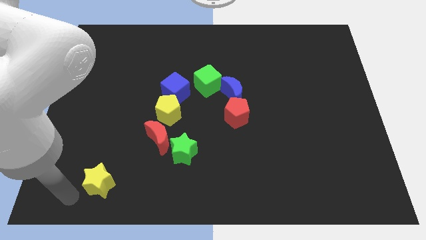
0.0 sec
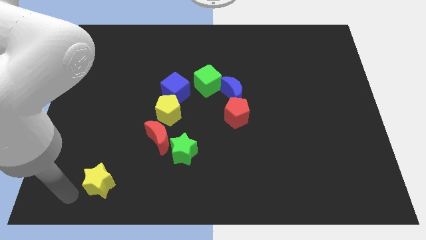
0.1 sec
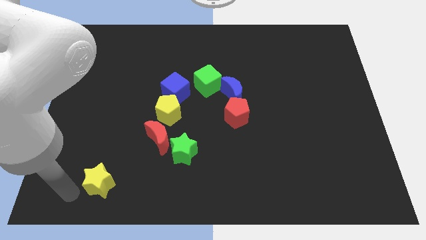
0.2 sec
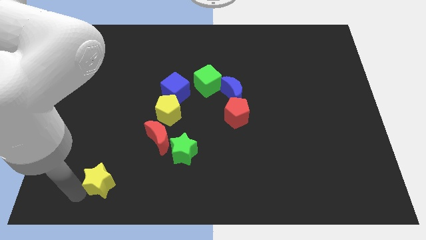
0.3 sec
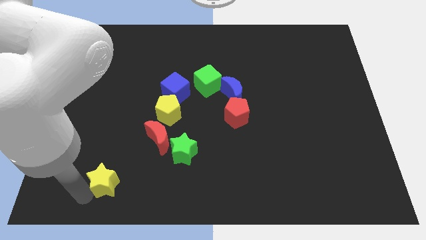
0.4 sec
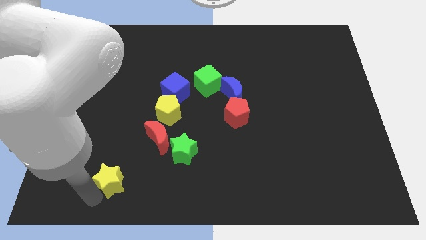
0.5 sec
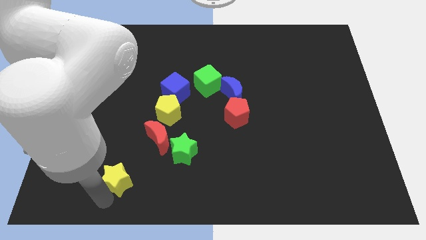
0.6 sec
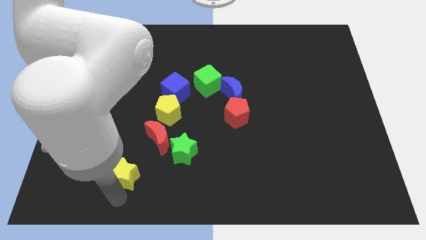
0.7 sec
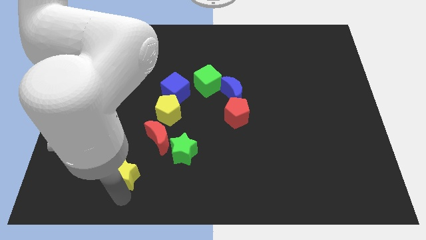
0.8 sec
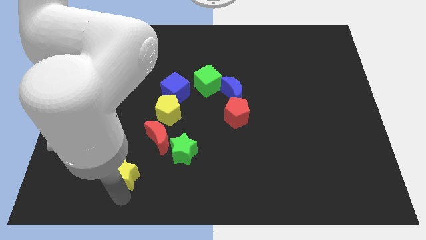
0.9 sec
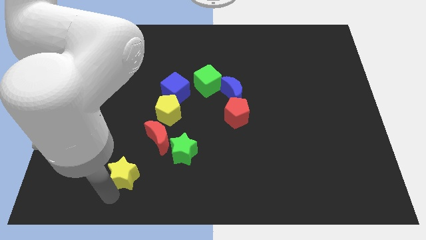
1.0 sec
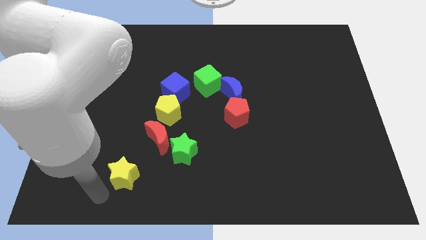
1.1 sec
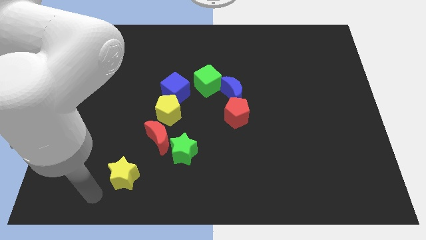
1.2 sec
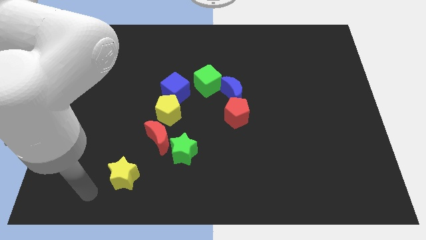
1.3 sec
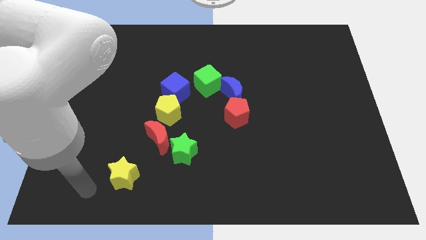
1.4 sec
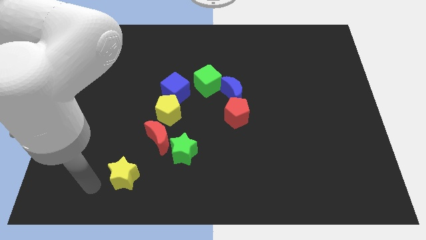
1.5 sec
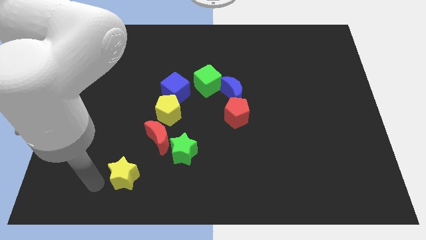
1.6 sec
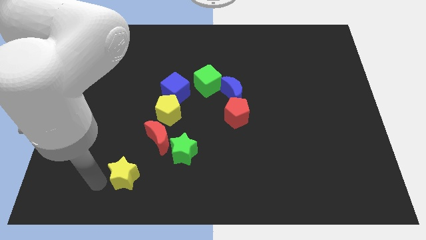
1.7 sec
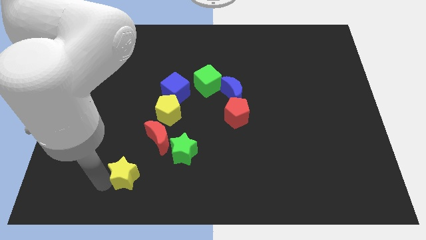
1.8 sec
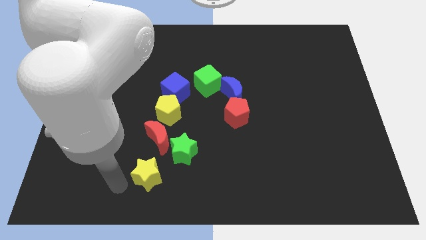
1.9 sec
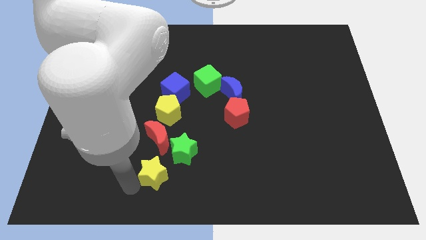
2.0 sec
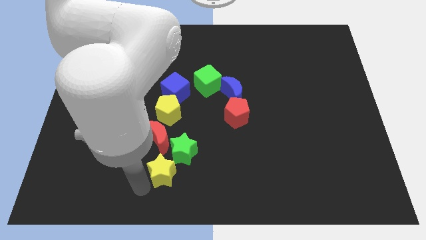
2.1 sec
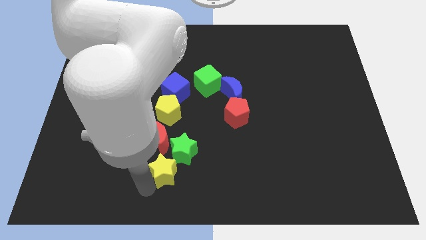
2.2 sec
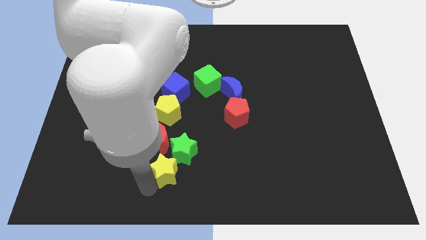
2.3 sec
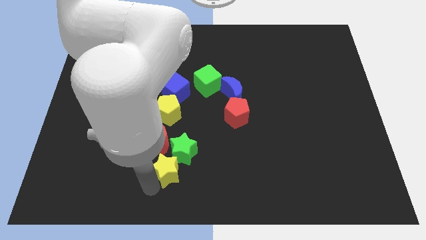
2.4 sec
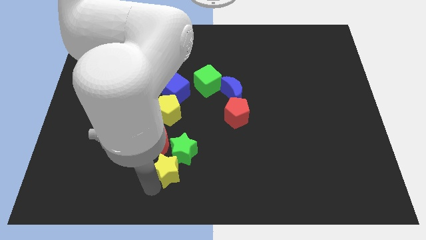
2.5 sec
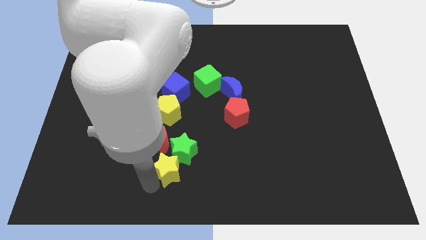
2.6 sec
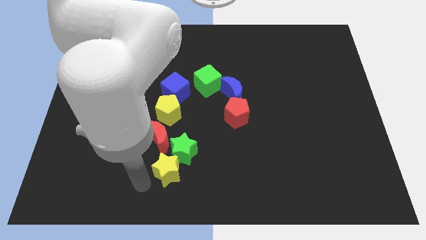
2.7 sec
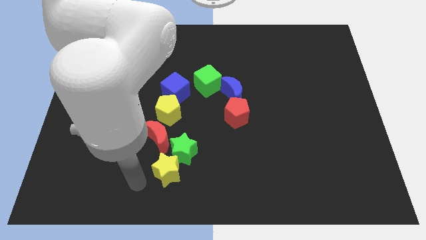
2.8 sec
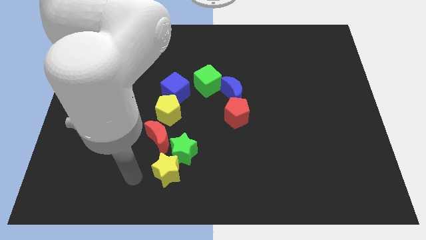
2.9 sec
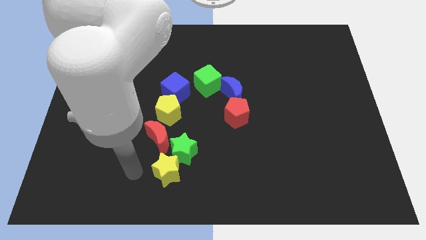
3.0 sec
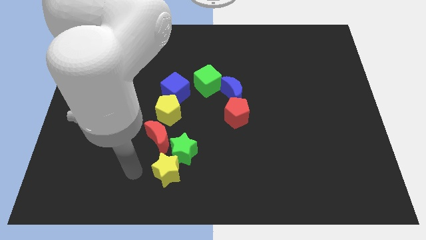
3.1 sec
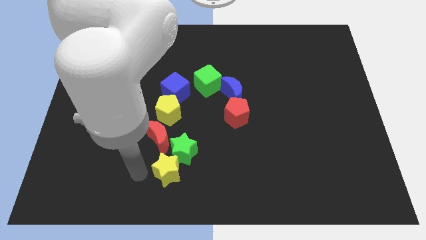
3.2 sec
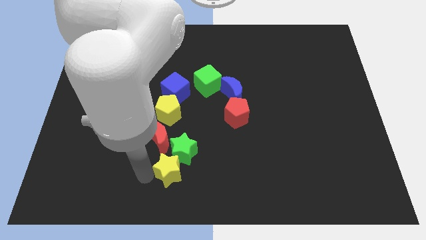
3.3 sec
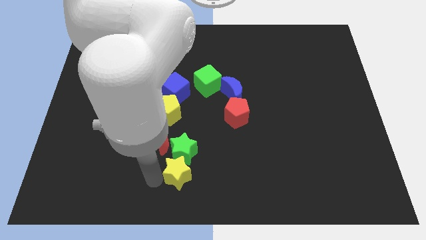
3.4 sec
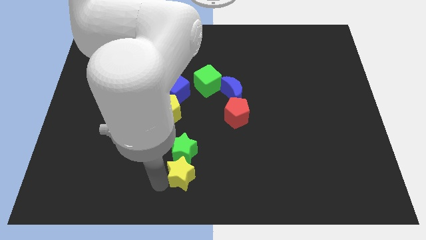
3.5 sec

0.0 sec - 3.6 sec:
move the yellow star to the bottom side of the green star

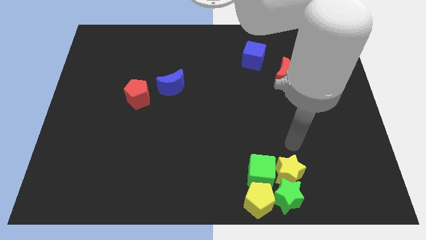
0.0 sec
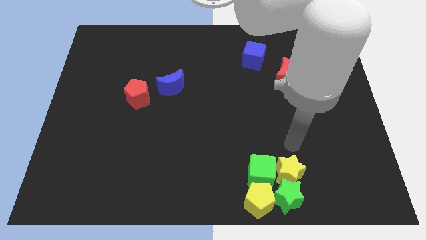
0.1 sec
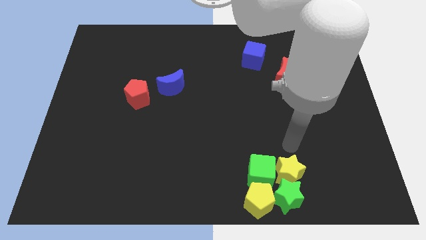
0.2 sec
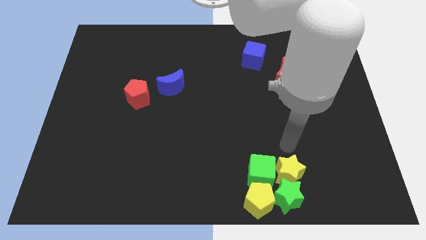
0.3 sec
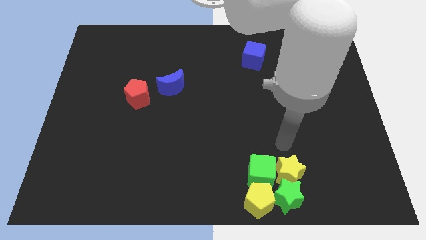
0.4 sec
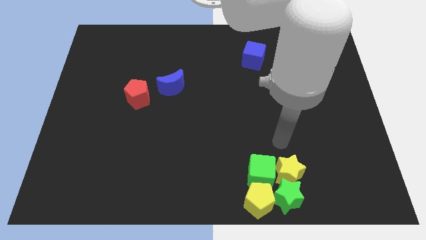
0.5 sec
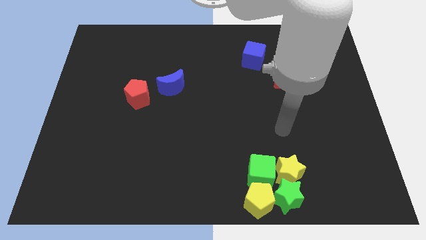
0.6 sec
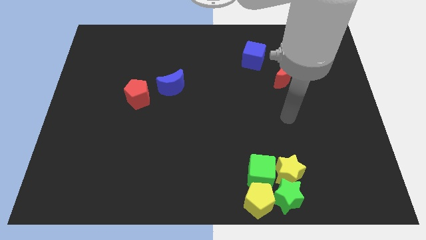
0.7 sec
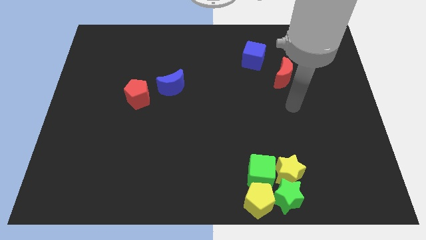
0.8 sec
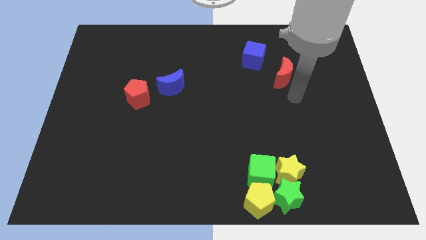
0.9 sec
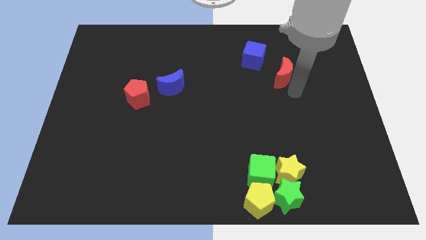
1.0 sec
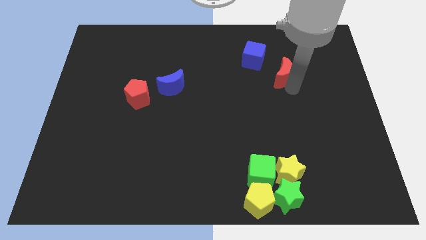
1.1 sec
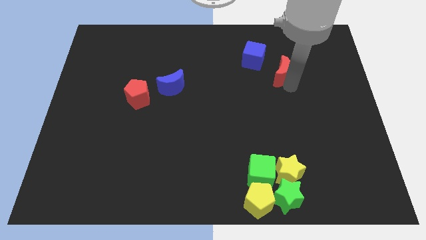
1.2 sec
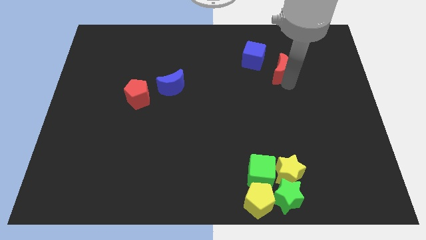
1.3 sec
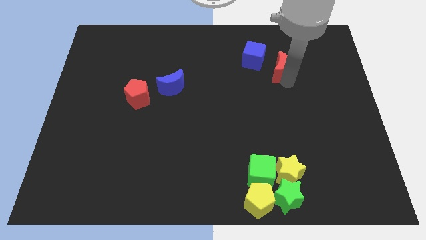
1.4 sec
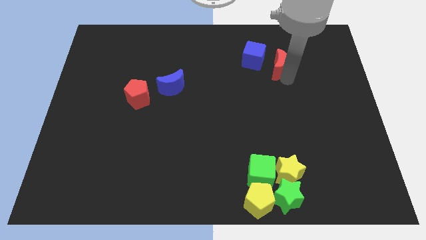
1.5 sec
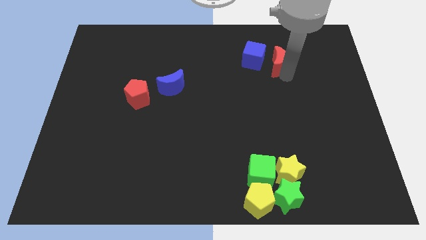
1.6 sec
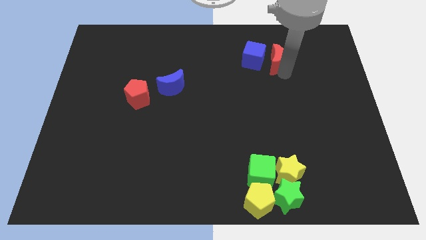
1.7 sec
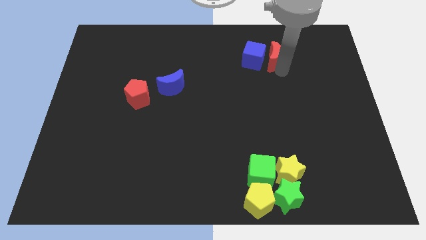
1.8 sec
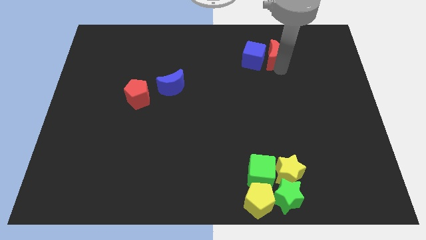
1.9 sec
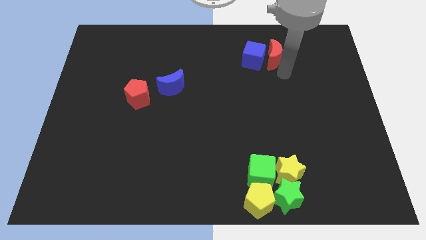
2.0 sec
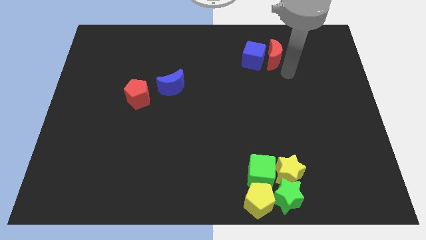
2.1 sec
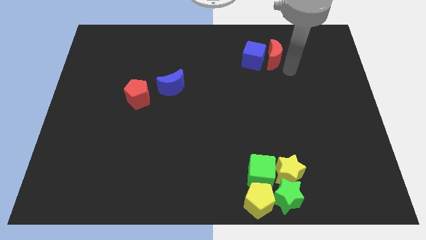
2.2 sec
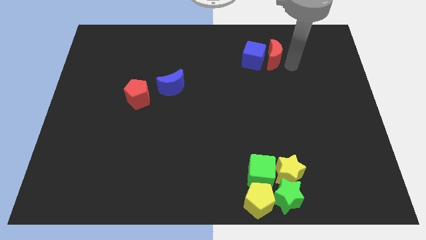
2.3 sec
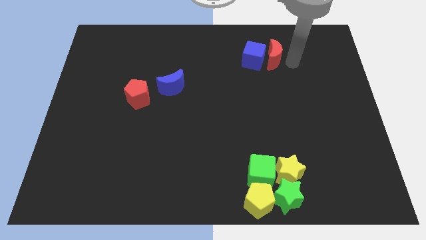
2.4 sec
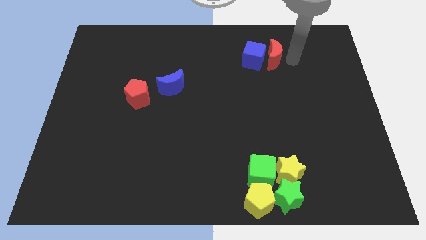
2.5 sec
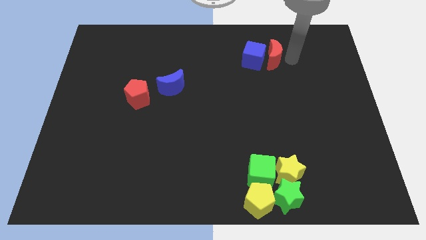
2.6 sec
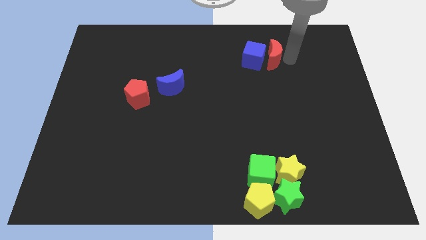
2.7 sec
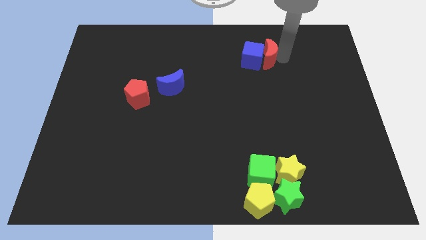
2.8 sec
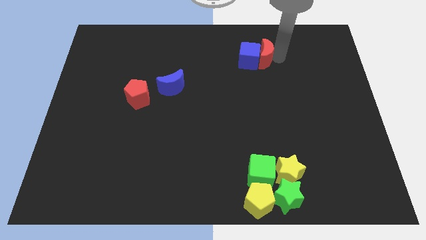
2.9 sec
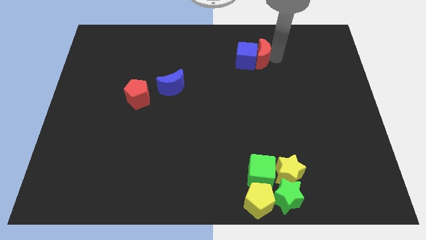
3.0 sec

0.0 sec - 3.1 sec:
push the red crescent to the right of the blue cube

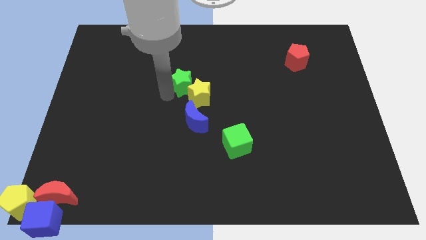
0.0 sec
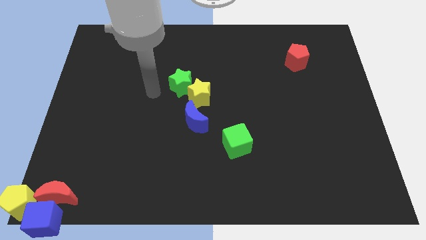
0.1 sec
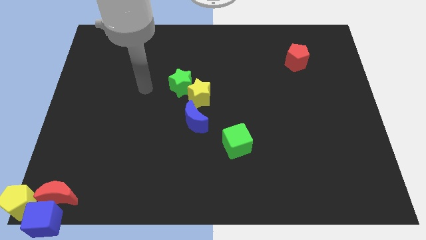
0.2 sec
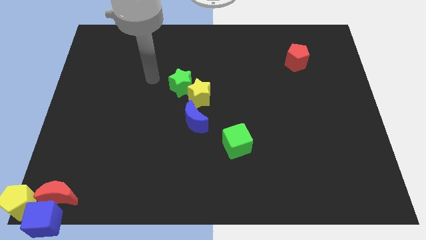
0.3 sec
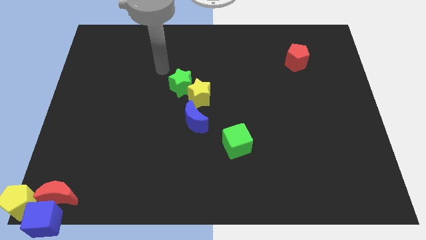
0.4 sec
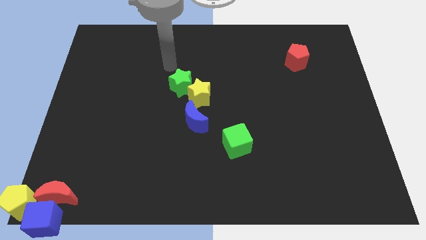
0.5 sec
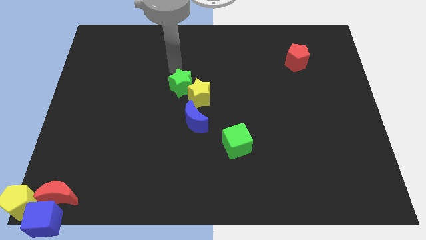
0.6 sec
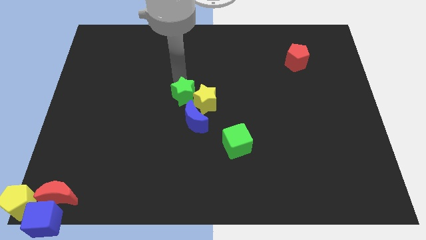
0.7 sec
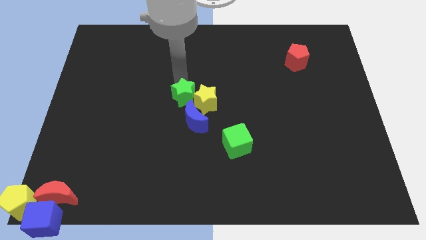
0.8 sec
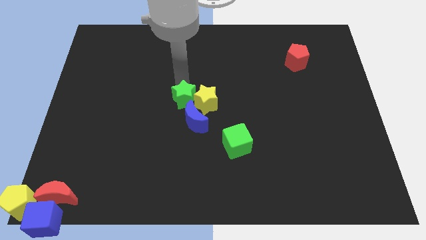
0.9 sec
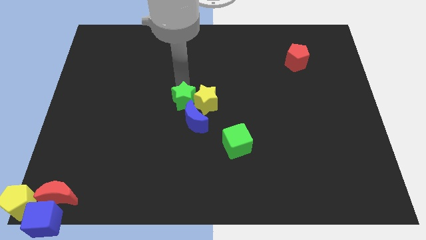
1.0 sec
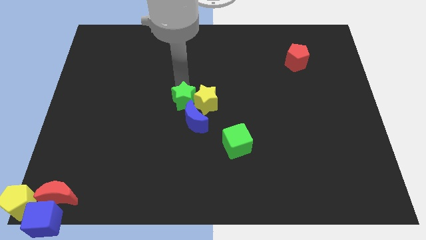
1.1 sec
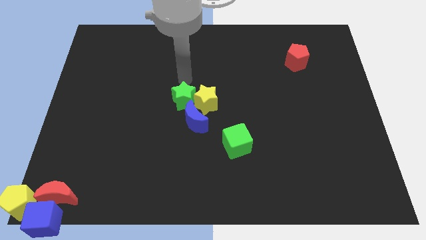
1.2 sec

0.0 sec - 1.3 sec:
place your arm above green star

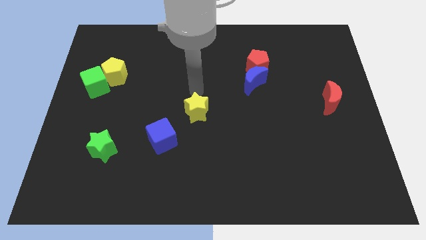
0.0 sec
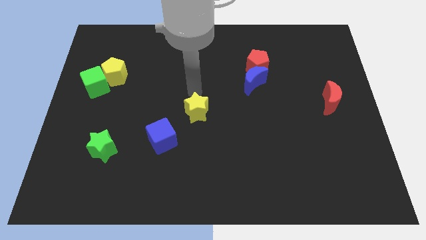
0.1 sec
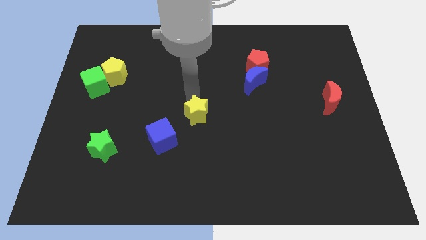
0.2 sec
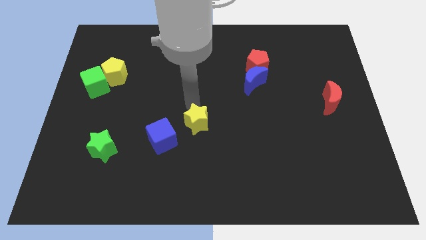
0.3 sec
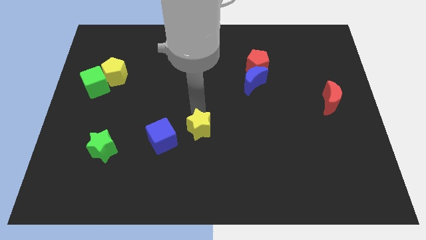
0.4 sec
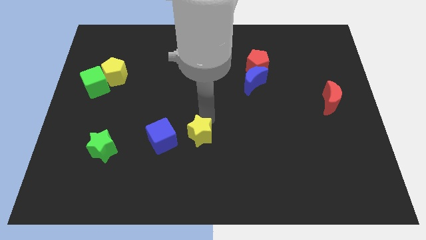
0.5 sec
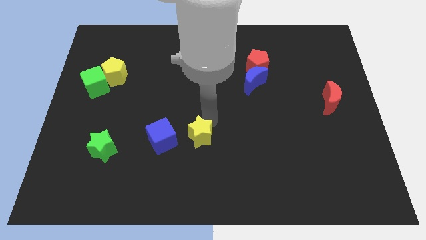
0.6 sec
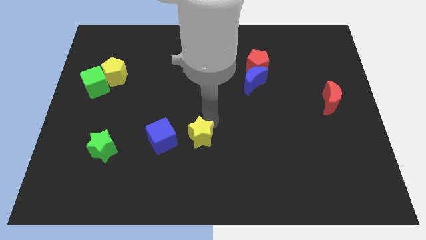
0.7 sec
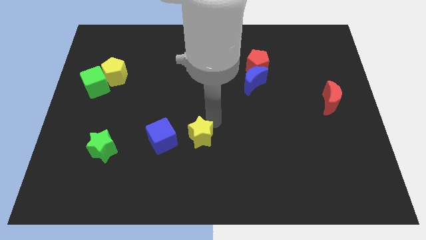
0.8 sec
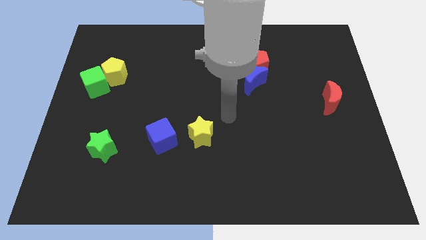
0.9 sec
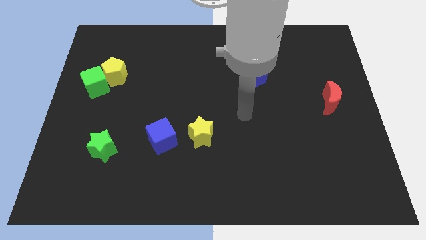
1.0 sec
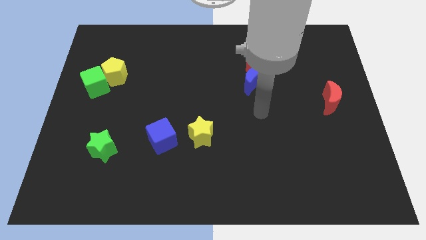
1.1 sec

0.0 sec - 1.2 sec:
move the yellow star to the right side of blue cube
